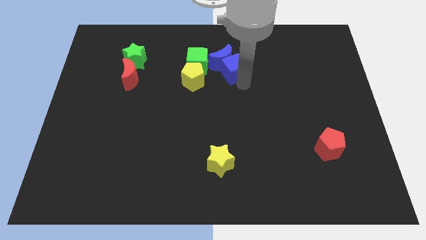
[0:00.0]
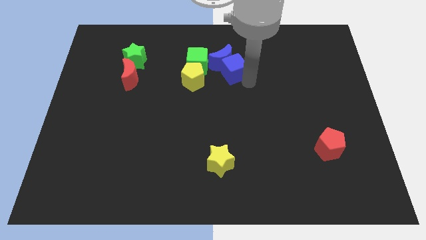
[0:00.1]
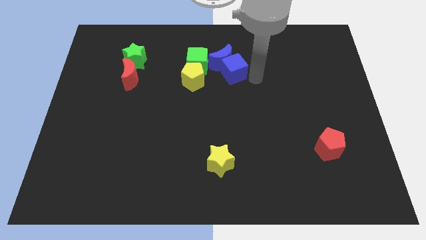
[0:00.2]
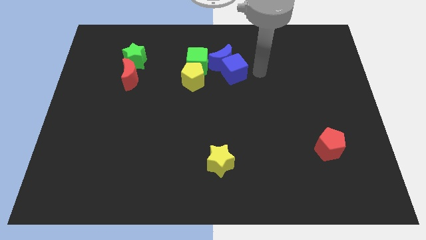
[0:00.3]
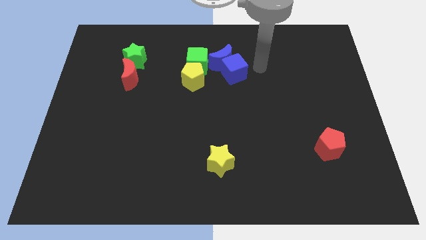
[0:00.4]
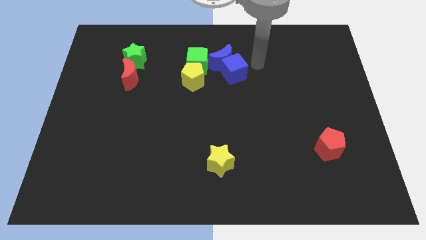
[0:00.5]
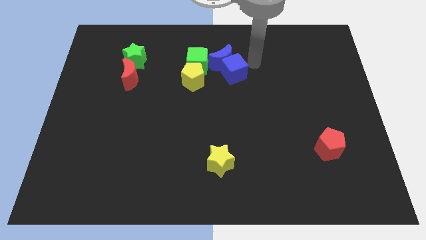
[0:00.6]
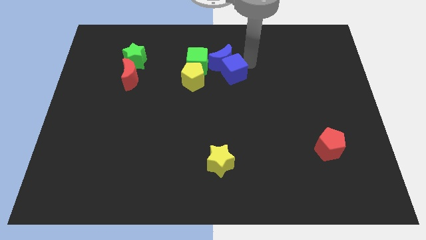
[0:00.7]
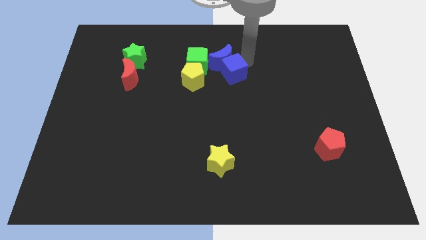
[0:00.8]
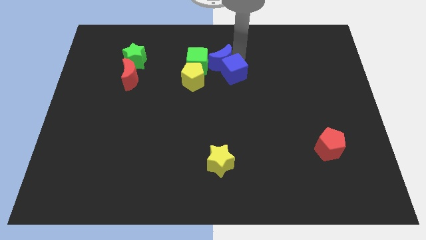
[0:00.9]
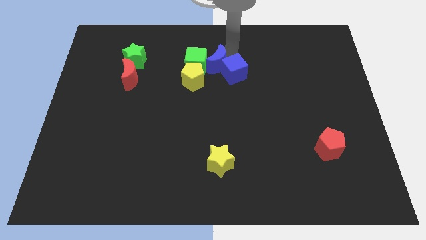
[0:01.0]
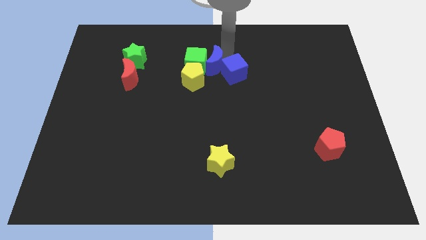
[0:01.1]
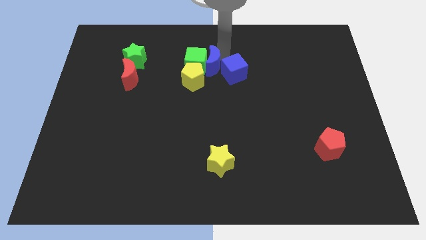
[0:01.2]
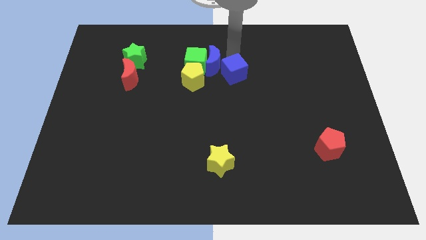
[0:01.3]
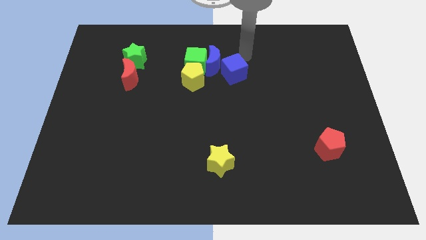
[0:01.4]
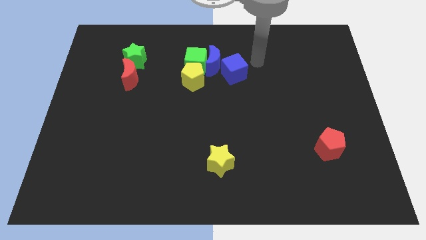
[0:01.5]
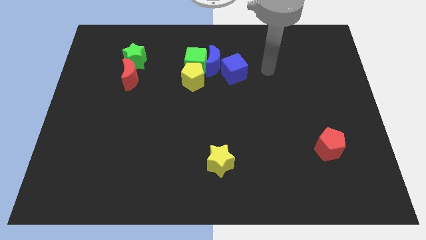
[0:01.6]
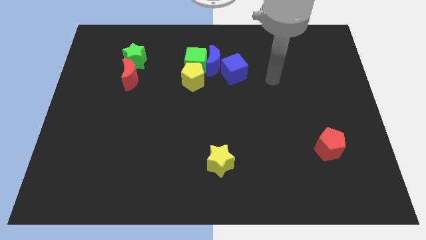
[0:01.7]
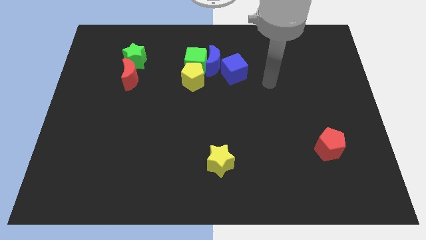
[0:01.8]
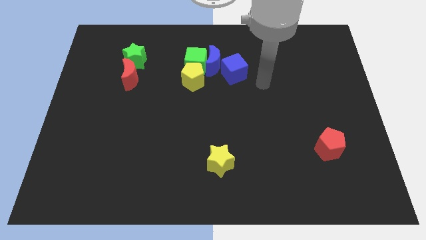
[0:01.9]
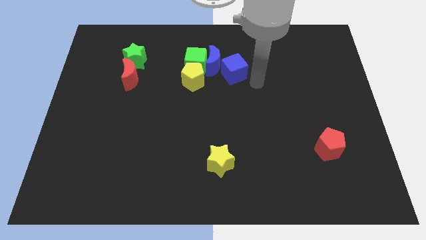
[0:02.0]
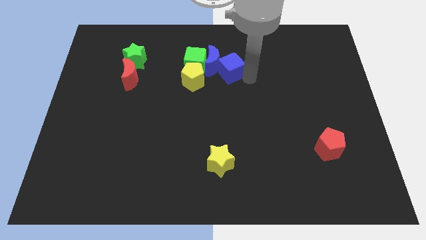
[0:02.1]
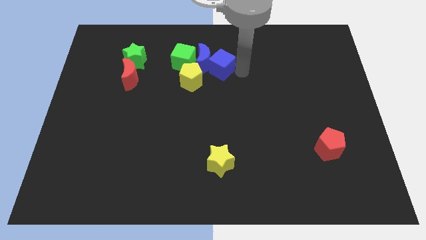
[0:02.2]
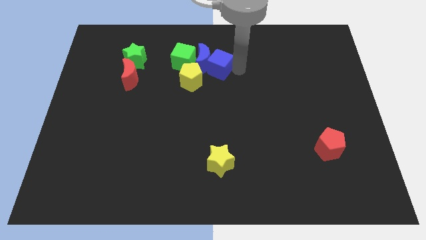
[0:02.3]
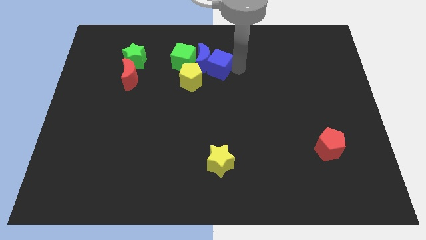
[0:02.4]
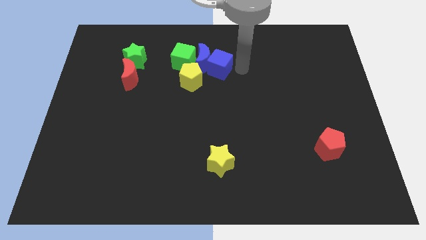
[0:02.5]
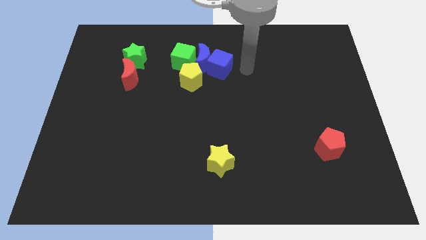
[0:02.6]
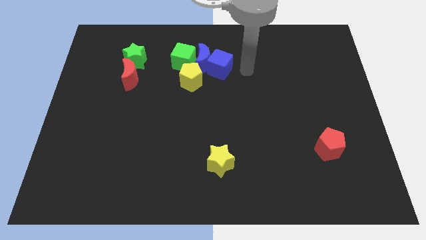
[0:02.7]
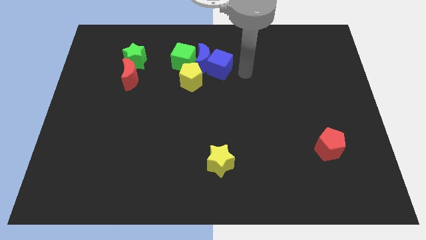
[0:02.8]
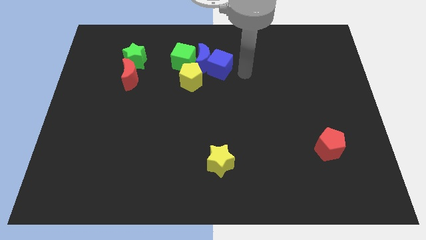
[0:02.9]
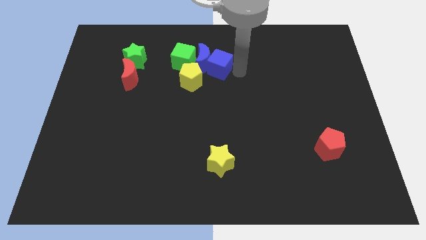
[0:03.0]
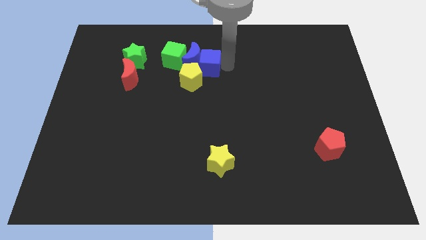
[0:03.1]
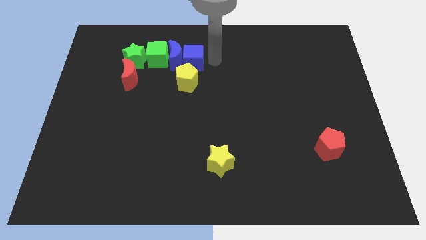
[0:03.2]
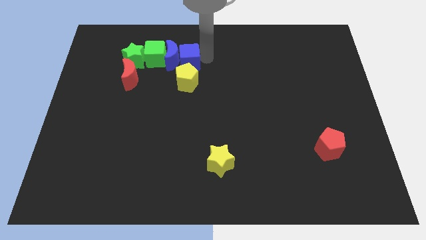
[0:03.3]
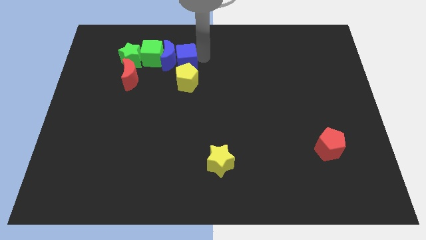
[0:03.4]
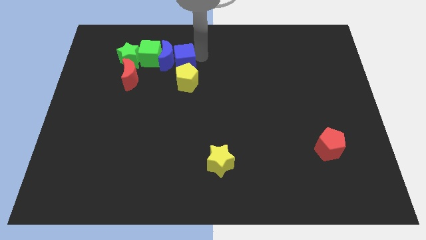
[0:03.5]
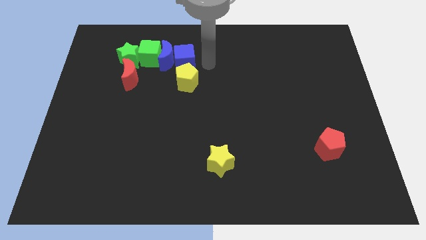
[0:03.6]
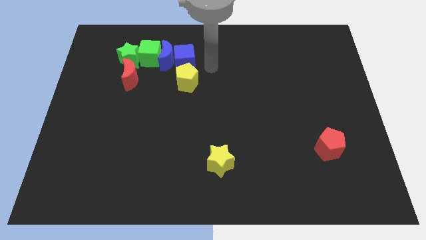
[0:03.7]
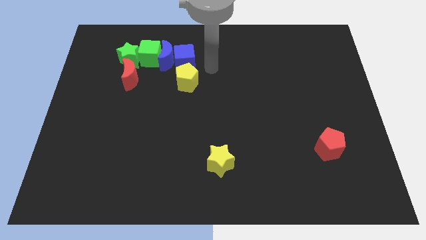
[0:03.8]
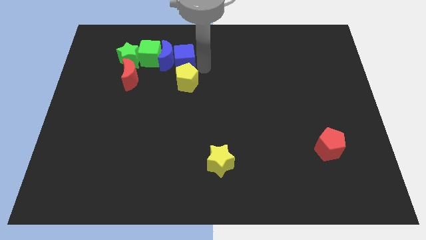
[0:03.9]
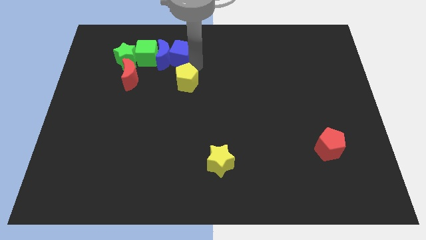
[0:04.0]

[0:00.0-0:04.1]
push the blue blocks along with green cube into the green star

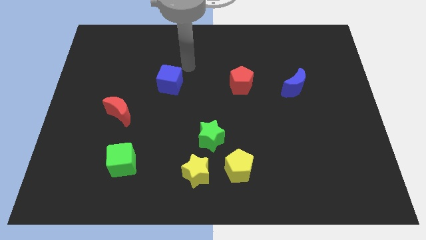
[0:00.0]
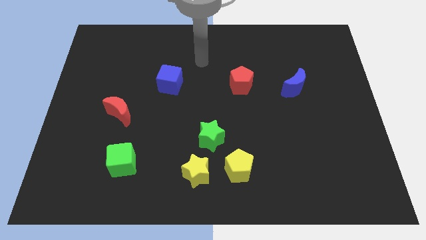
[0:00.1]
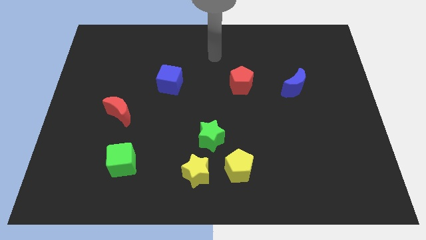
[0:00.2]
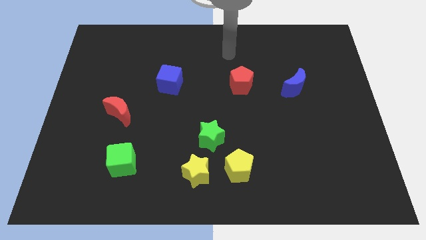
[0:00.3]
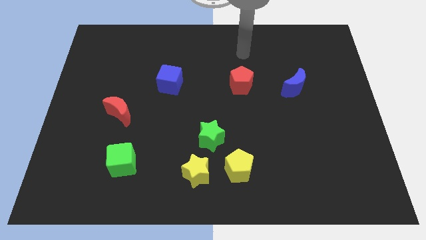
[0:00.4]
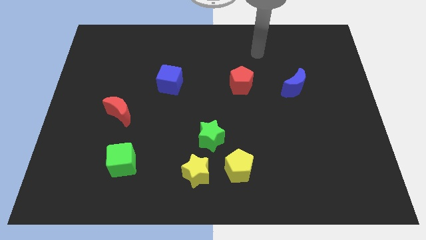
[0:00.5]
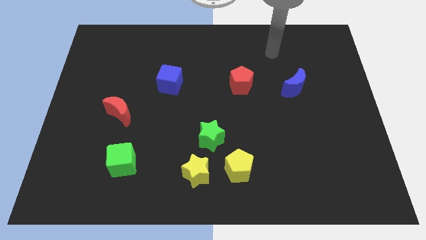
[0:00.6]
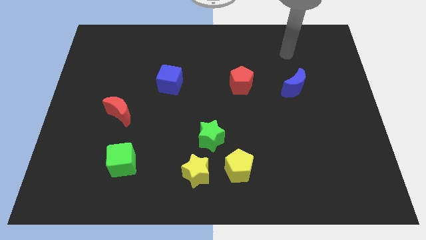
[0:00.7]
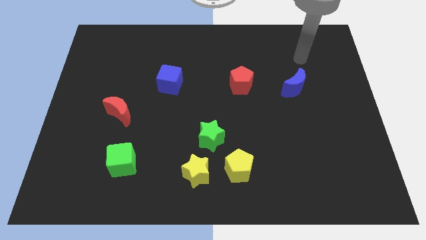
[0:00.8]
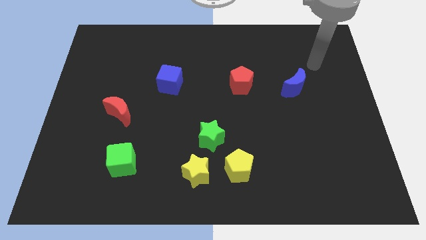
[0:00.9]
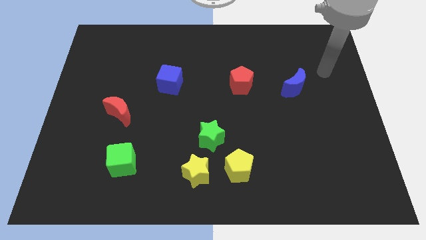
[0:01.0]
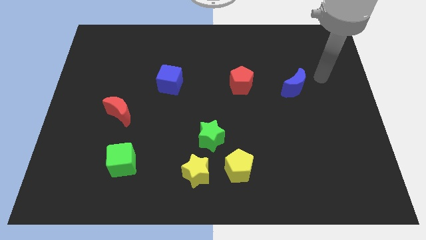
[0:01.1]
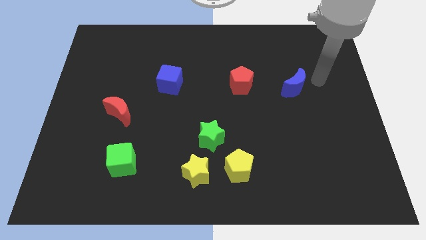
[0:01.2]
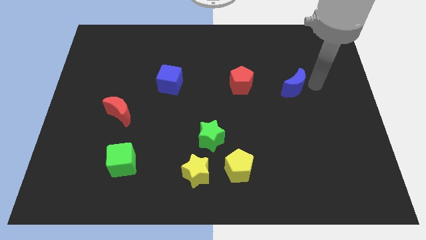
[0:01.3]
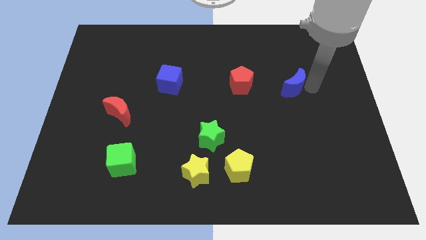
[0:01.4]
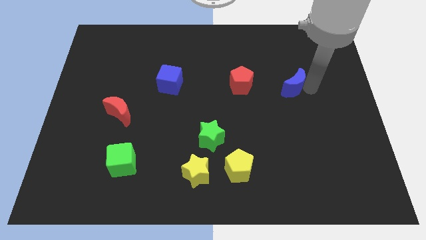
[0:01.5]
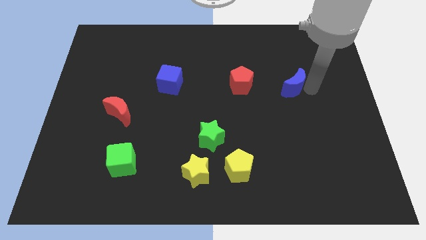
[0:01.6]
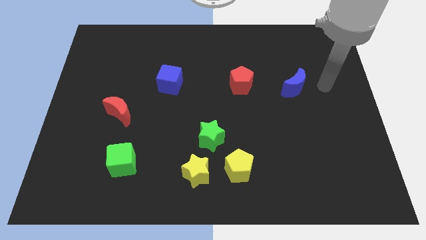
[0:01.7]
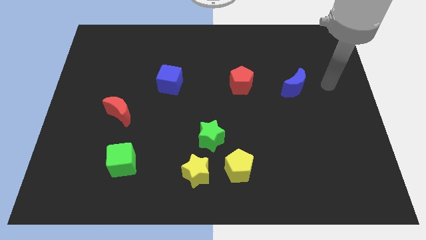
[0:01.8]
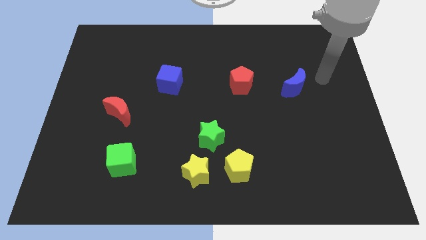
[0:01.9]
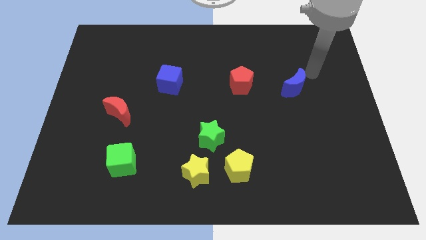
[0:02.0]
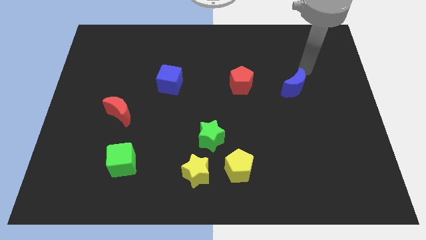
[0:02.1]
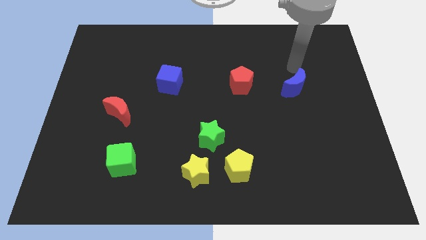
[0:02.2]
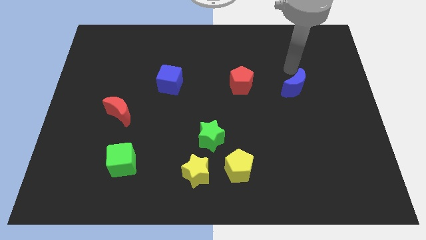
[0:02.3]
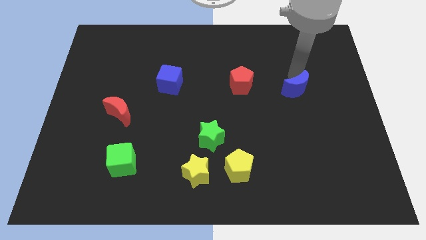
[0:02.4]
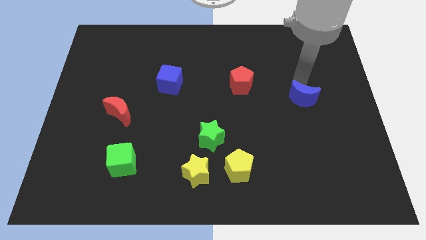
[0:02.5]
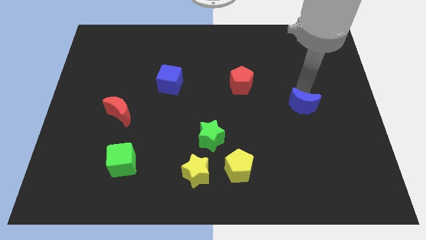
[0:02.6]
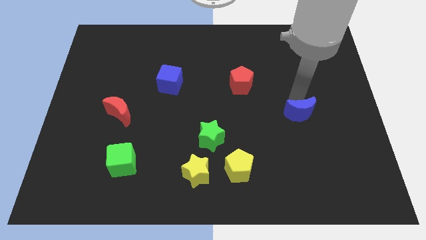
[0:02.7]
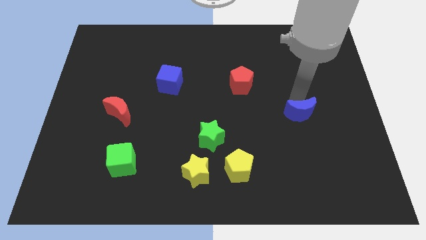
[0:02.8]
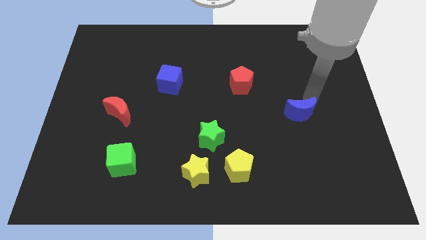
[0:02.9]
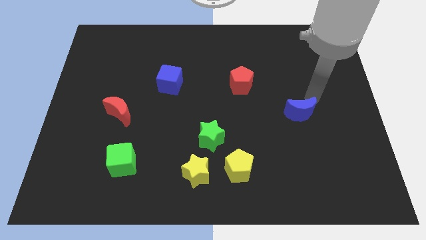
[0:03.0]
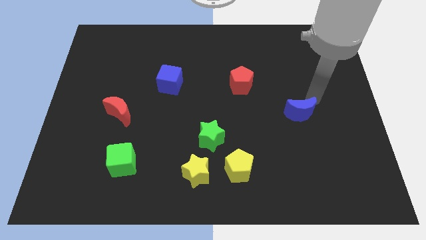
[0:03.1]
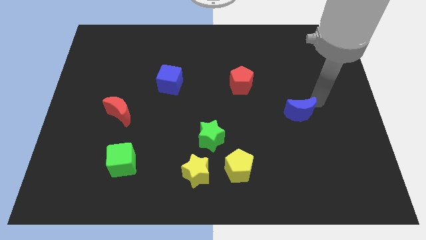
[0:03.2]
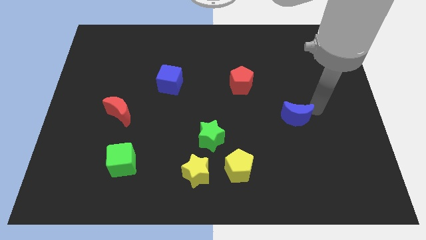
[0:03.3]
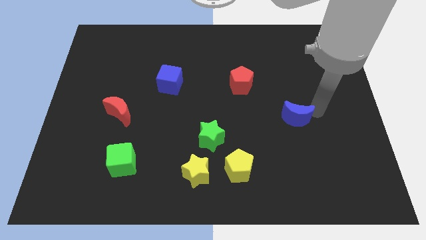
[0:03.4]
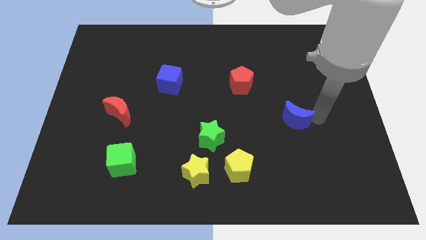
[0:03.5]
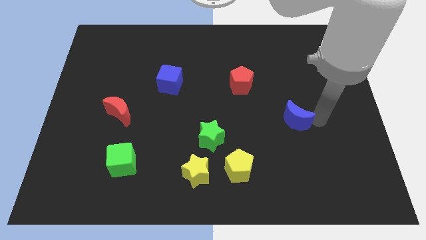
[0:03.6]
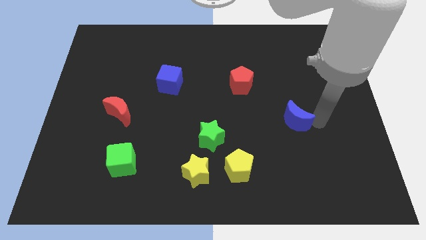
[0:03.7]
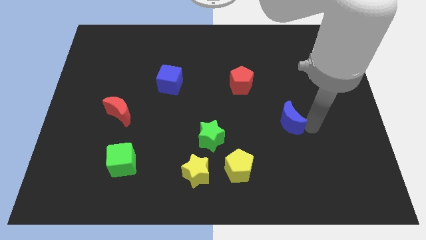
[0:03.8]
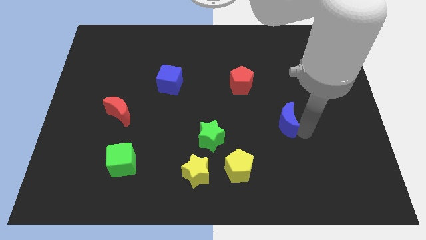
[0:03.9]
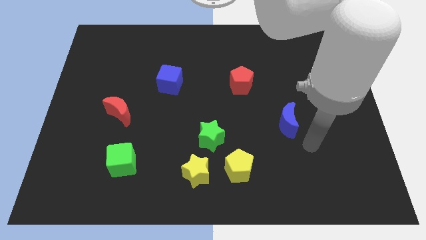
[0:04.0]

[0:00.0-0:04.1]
move the blue crescent diagonally below the bottom right side of the red pentagon

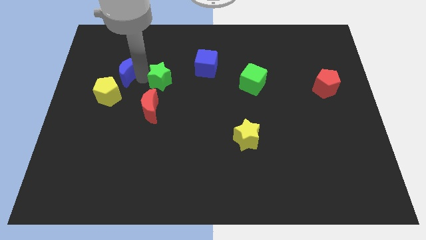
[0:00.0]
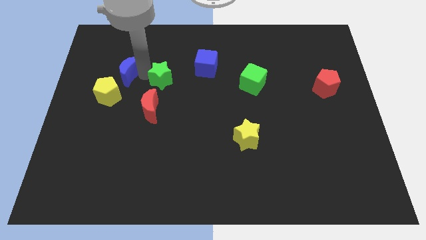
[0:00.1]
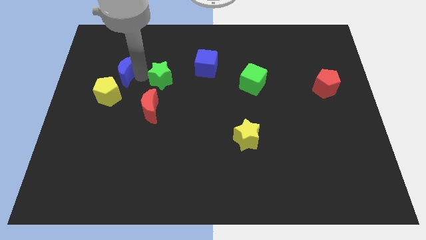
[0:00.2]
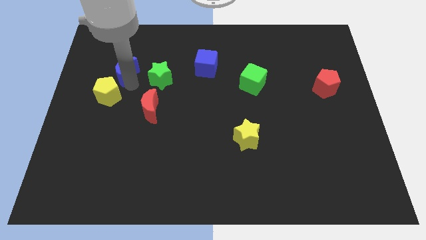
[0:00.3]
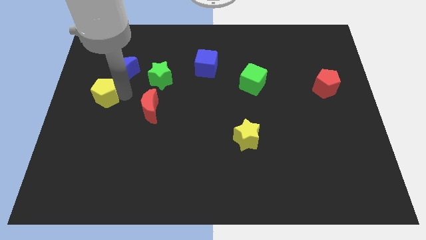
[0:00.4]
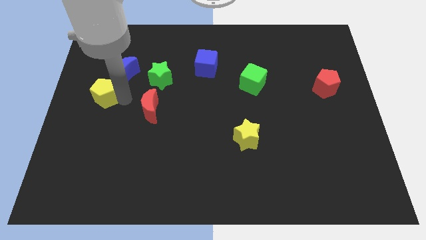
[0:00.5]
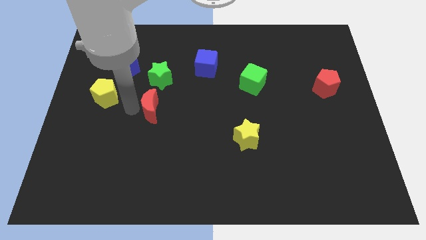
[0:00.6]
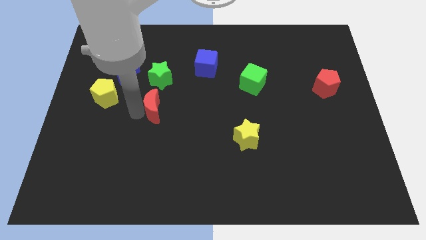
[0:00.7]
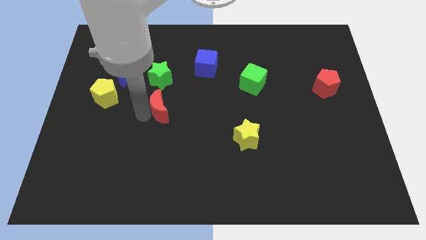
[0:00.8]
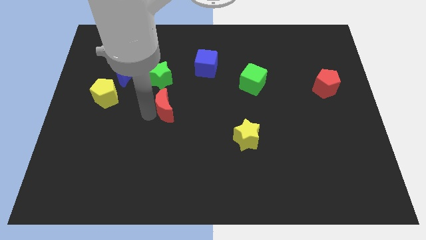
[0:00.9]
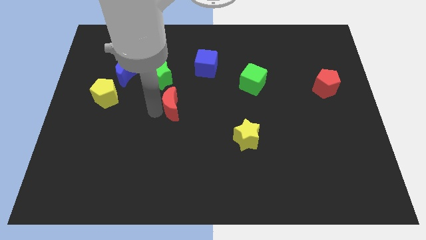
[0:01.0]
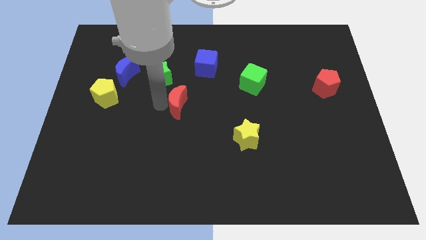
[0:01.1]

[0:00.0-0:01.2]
tap the arm on the left side of the red moon
